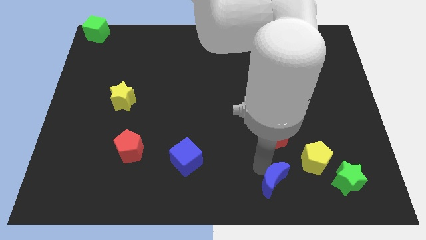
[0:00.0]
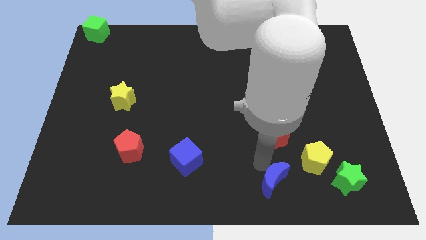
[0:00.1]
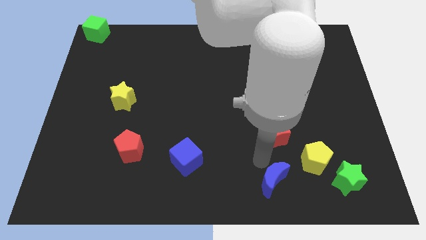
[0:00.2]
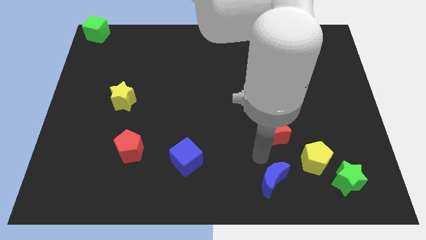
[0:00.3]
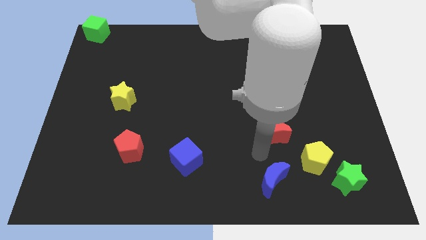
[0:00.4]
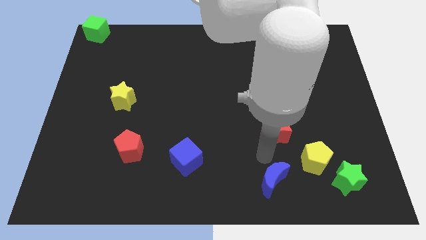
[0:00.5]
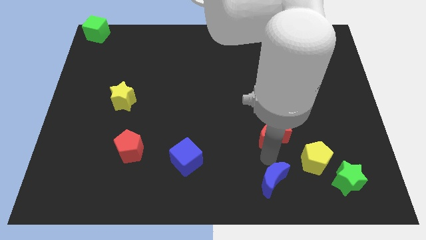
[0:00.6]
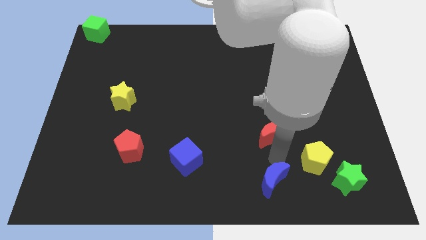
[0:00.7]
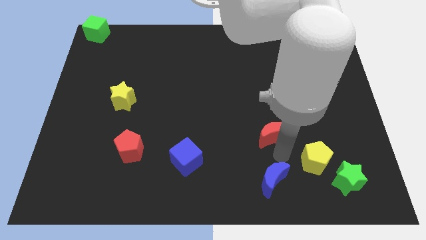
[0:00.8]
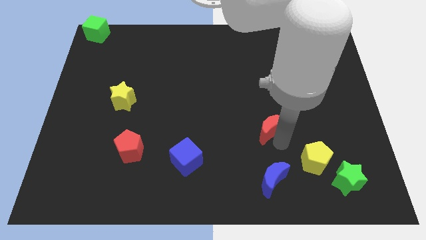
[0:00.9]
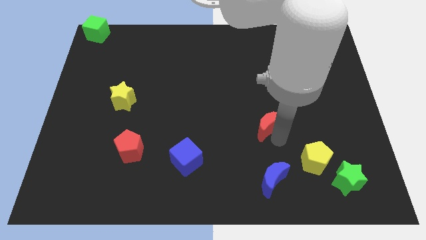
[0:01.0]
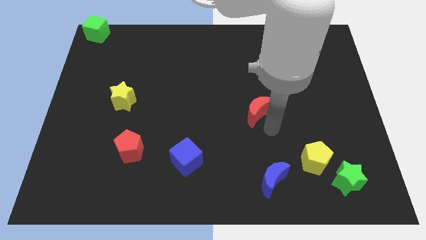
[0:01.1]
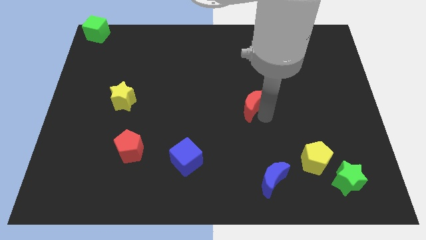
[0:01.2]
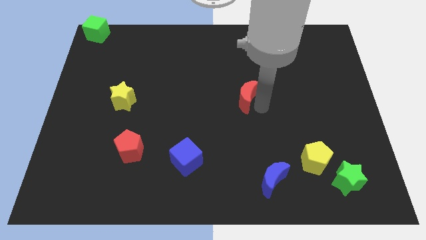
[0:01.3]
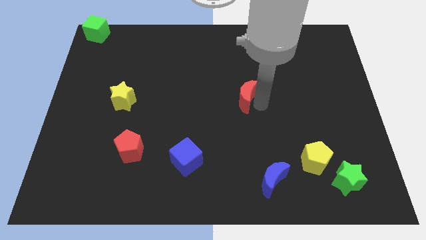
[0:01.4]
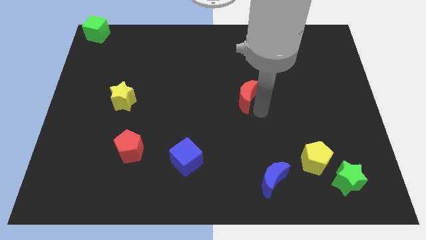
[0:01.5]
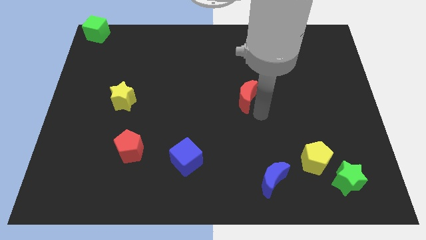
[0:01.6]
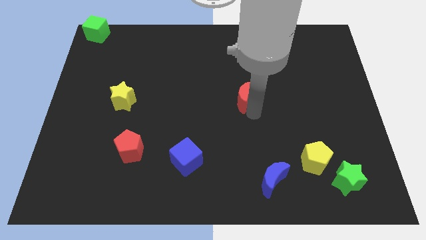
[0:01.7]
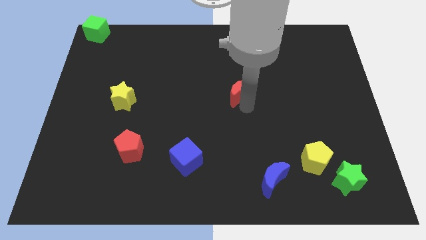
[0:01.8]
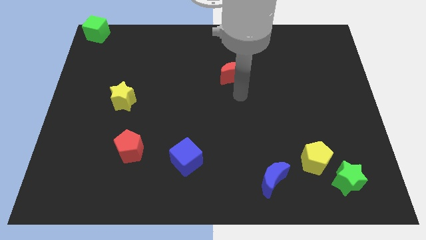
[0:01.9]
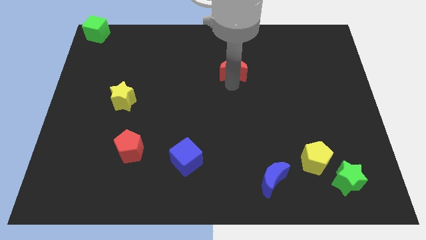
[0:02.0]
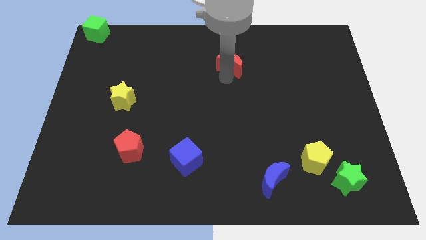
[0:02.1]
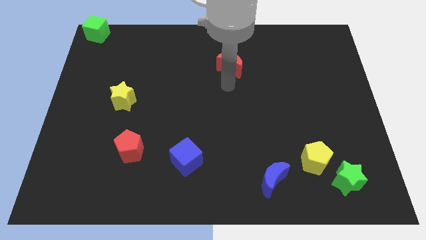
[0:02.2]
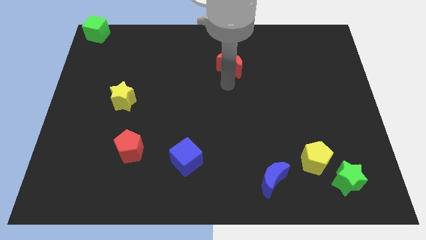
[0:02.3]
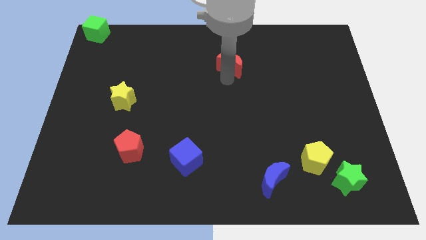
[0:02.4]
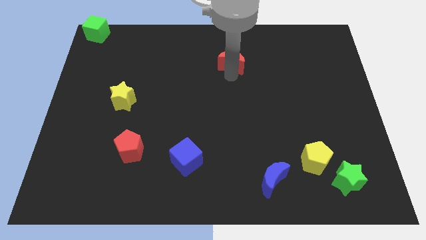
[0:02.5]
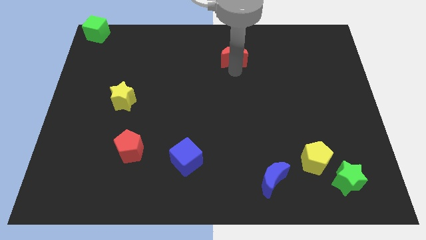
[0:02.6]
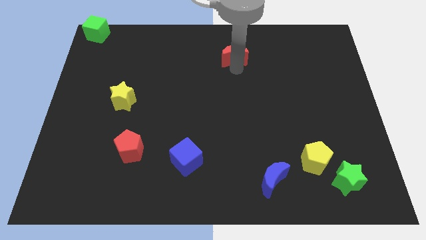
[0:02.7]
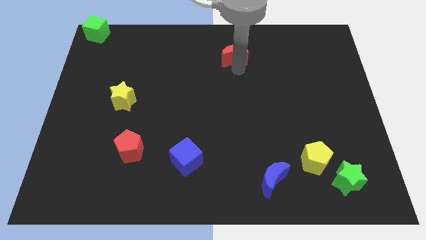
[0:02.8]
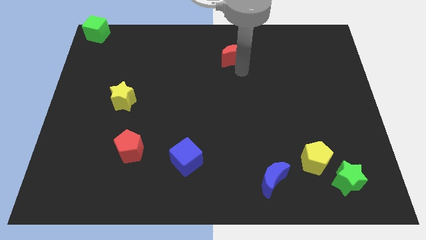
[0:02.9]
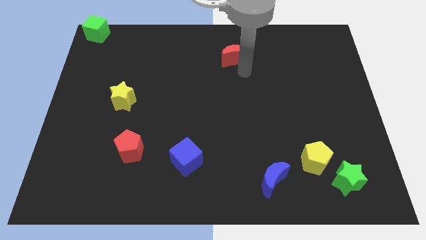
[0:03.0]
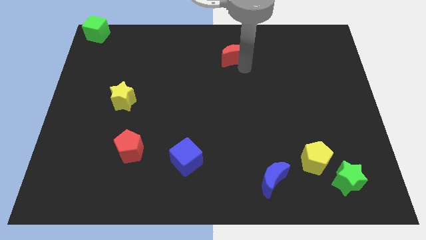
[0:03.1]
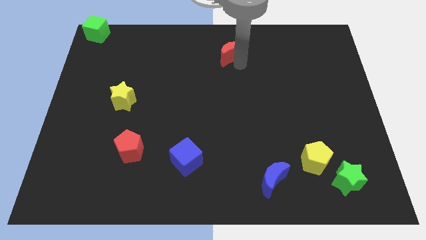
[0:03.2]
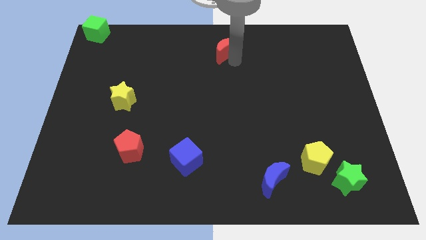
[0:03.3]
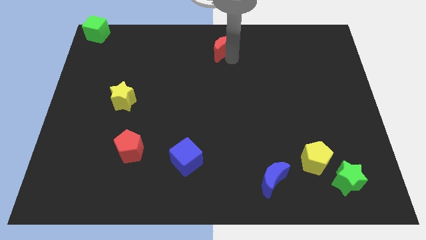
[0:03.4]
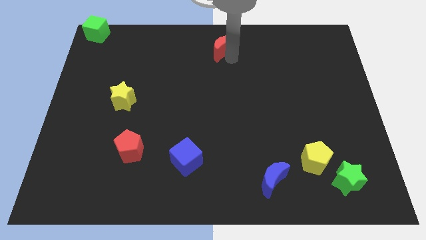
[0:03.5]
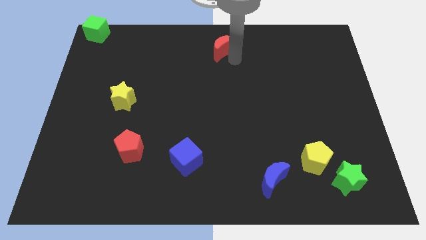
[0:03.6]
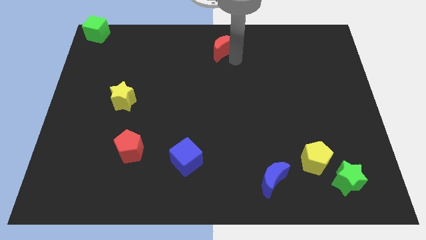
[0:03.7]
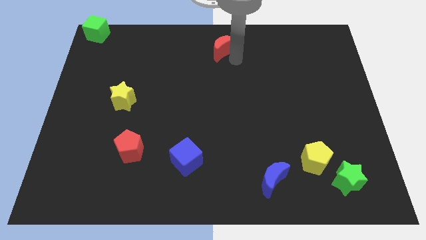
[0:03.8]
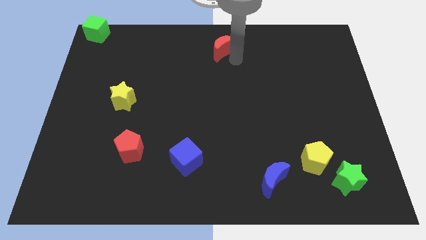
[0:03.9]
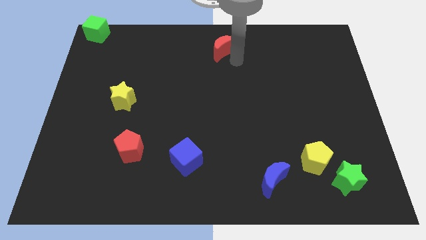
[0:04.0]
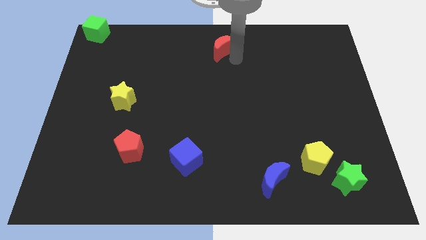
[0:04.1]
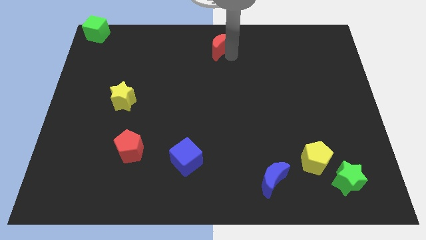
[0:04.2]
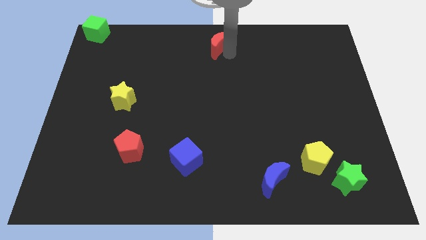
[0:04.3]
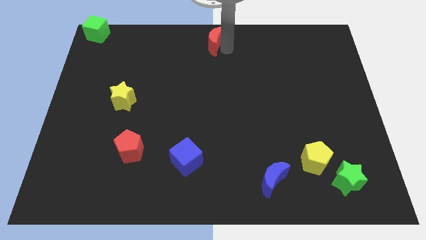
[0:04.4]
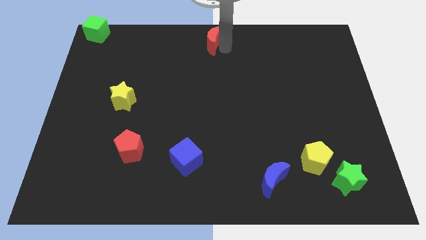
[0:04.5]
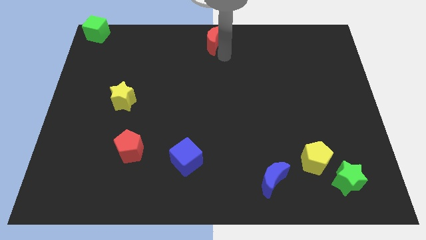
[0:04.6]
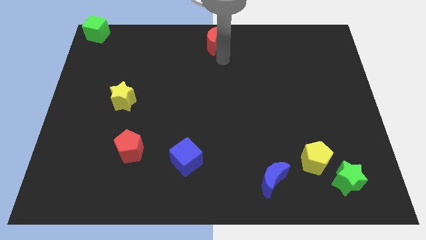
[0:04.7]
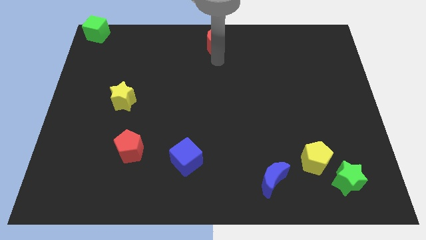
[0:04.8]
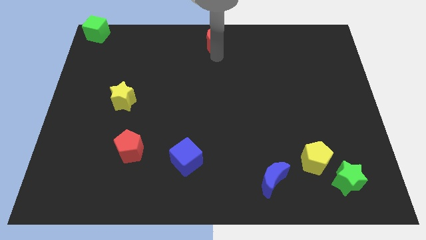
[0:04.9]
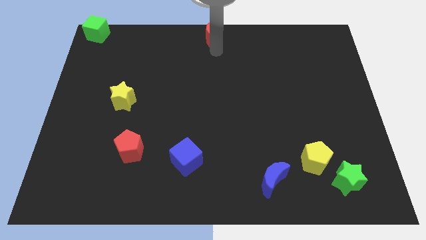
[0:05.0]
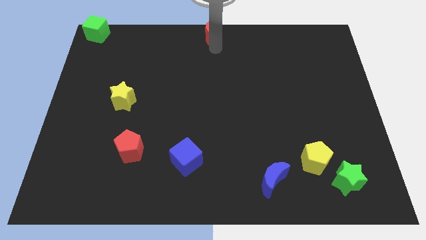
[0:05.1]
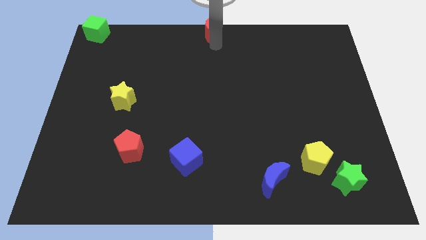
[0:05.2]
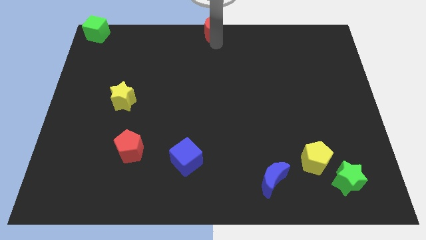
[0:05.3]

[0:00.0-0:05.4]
move the red crescent to the top center of the board

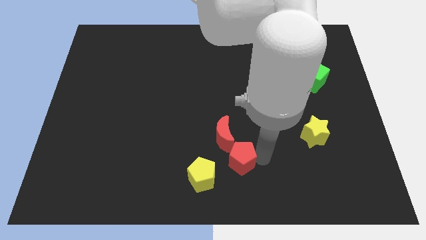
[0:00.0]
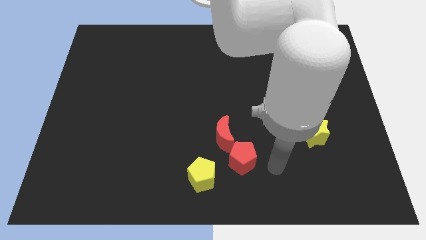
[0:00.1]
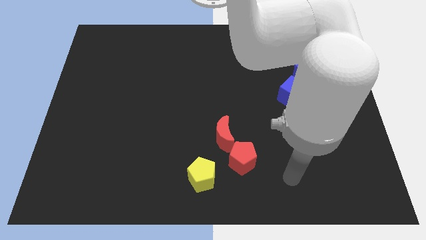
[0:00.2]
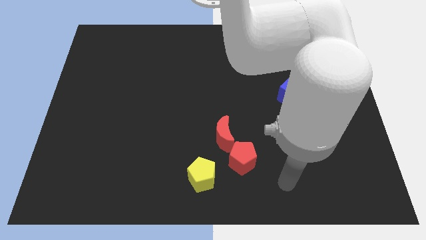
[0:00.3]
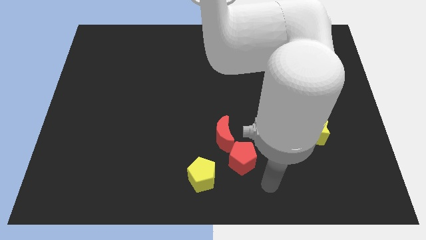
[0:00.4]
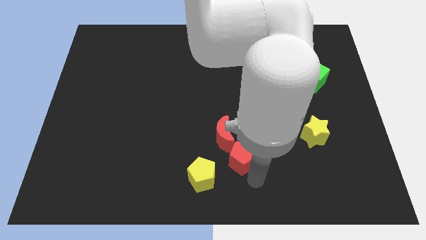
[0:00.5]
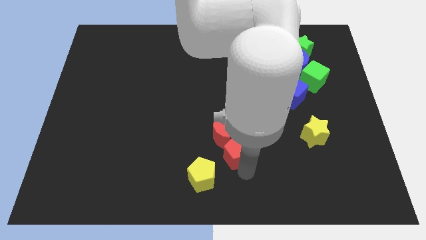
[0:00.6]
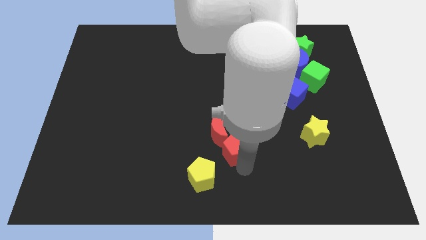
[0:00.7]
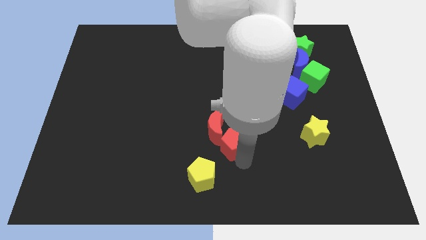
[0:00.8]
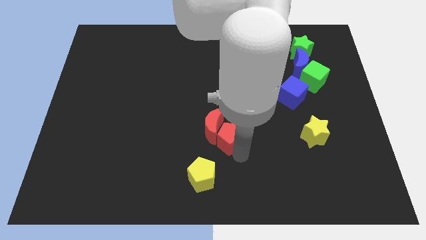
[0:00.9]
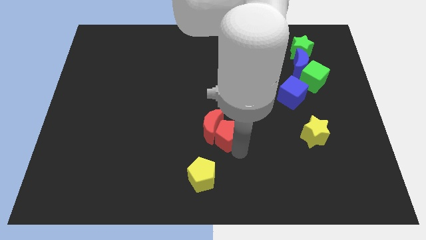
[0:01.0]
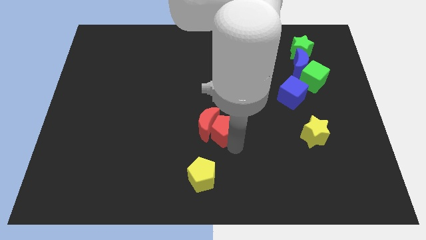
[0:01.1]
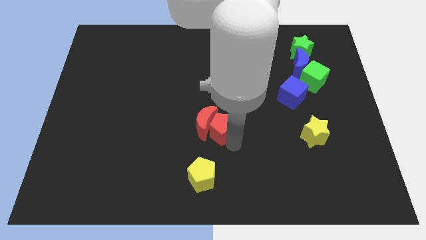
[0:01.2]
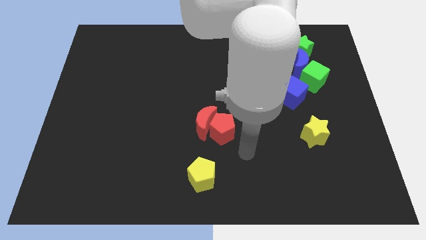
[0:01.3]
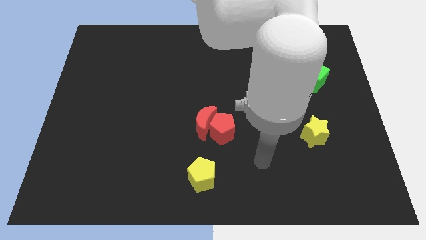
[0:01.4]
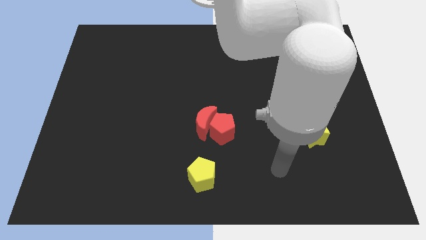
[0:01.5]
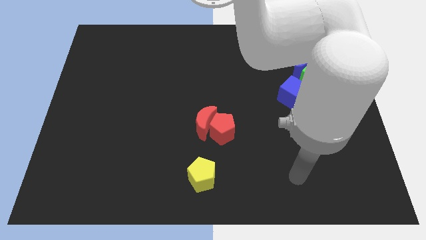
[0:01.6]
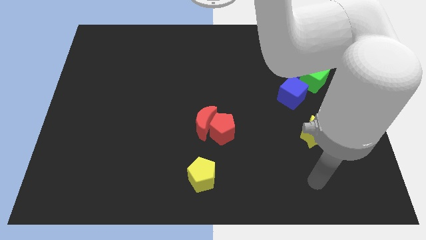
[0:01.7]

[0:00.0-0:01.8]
move the red blocks to the left of the blue cube

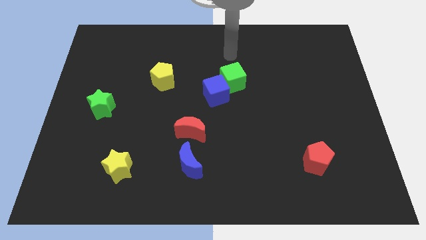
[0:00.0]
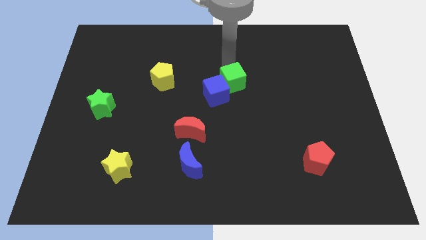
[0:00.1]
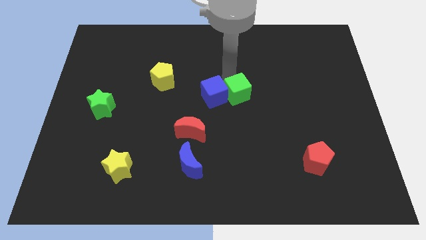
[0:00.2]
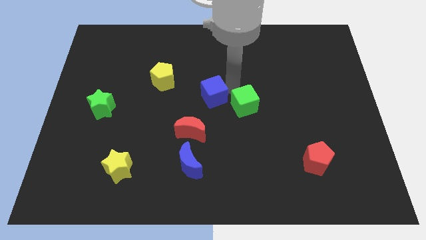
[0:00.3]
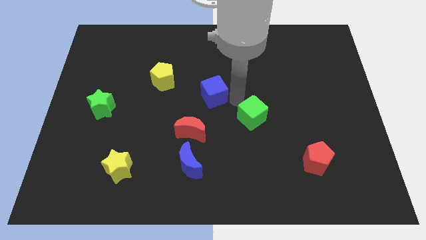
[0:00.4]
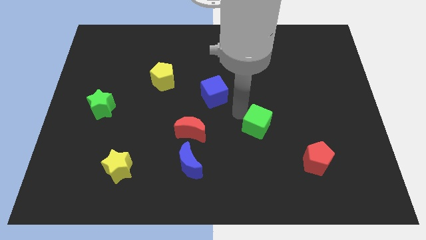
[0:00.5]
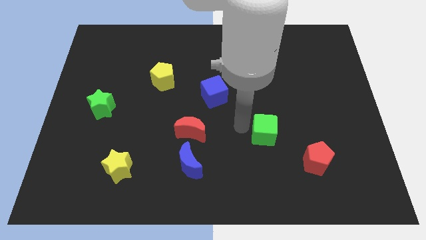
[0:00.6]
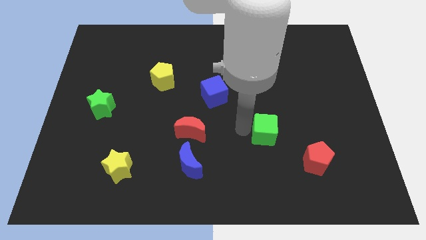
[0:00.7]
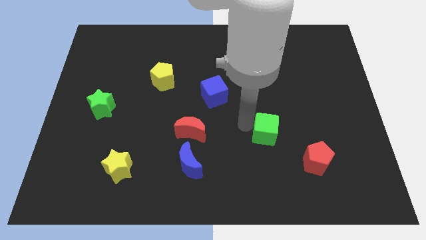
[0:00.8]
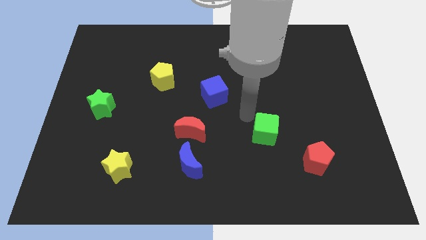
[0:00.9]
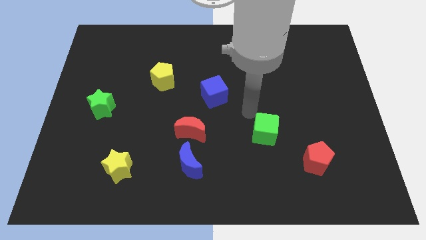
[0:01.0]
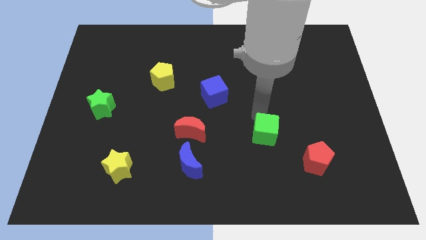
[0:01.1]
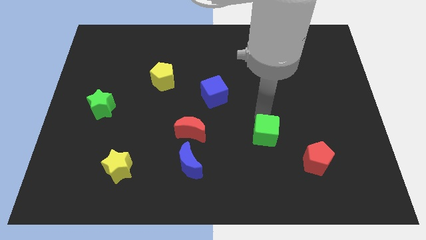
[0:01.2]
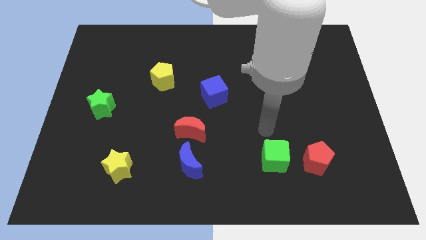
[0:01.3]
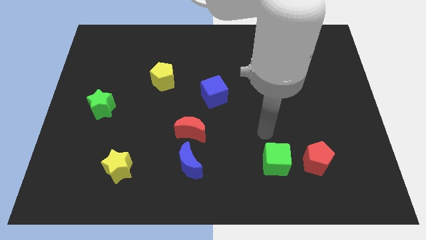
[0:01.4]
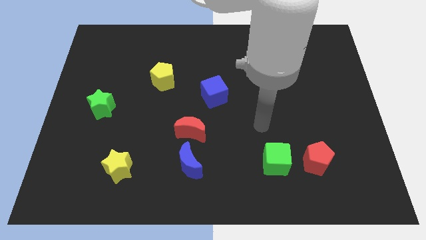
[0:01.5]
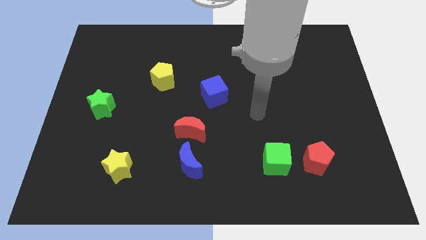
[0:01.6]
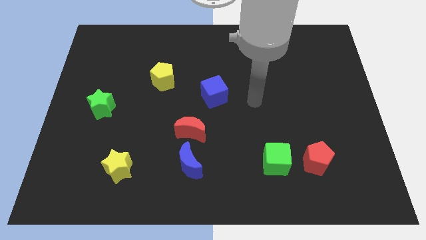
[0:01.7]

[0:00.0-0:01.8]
push the green cube to the left of the red pentagon
